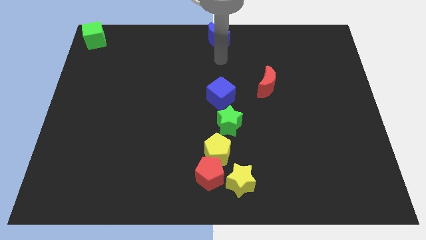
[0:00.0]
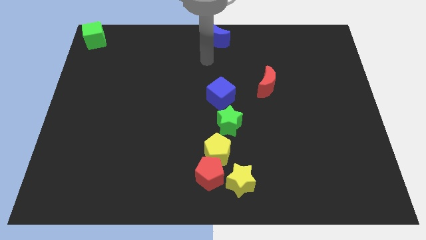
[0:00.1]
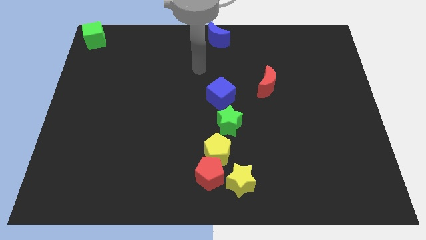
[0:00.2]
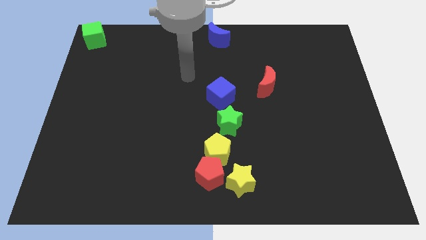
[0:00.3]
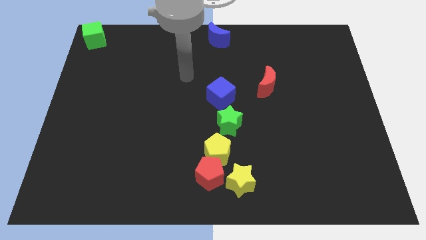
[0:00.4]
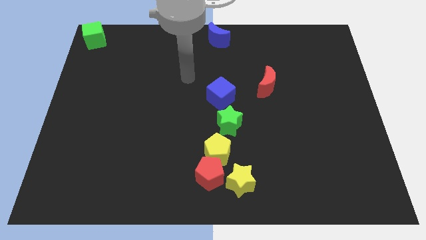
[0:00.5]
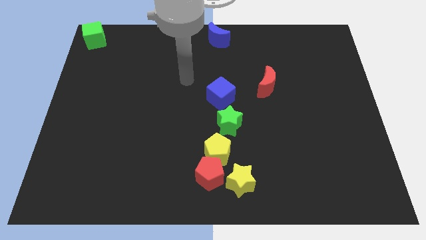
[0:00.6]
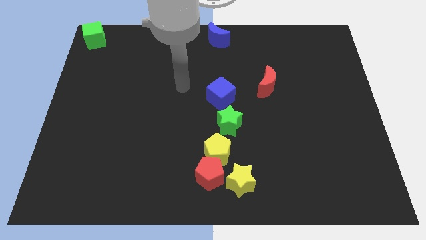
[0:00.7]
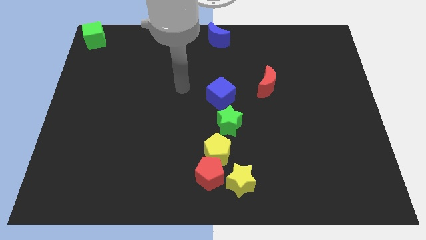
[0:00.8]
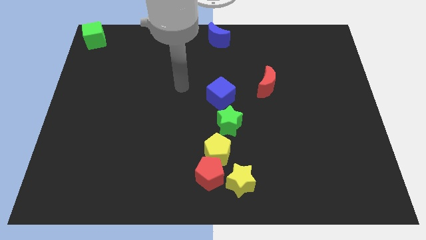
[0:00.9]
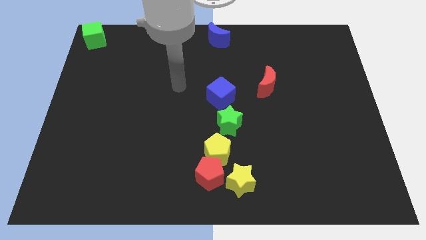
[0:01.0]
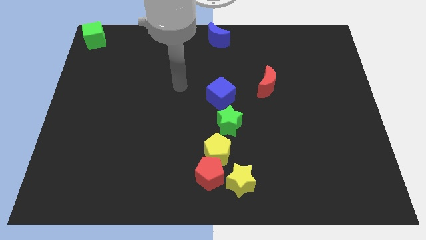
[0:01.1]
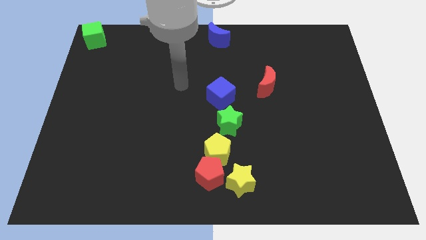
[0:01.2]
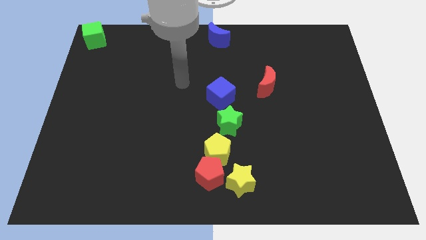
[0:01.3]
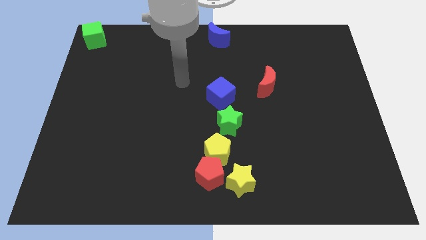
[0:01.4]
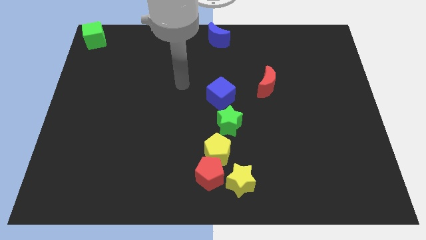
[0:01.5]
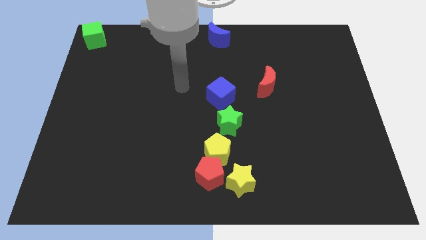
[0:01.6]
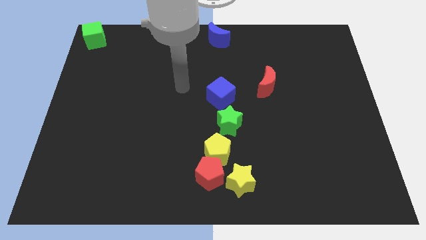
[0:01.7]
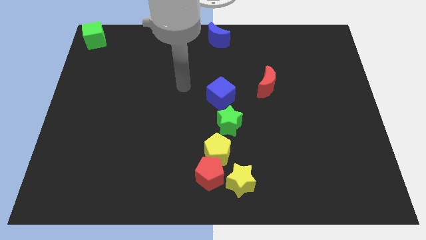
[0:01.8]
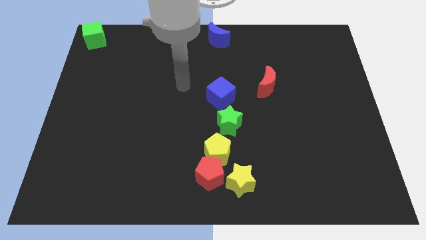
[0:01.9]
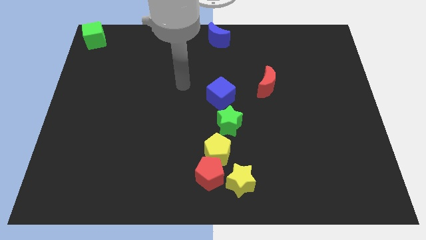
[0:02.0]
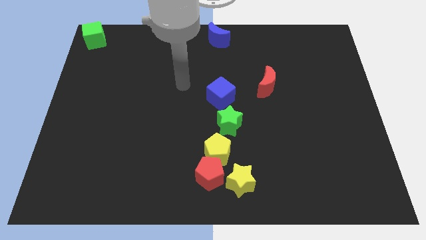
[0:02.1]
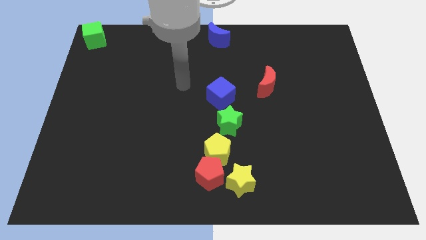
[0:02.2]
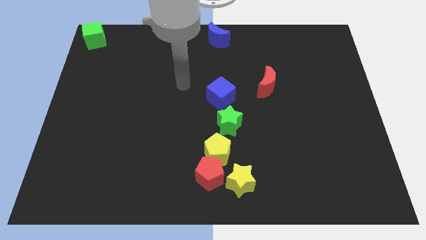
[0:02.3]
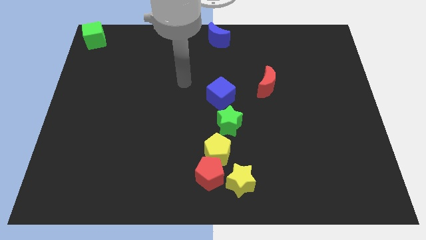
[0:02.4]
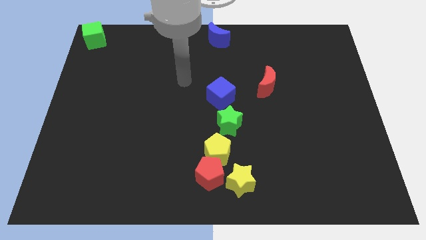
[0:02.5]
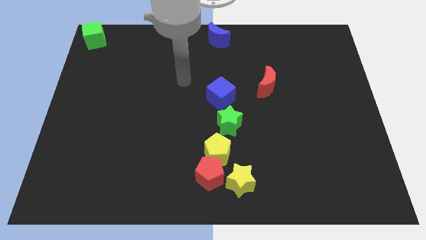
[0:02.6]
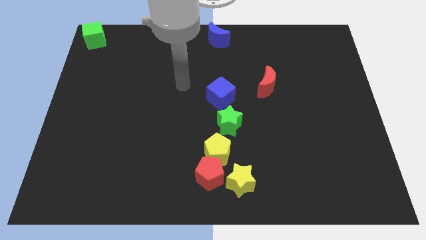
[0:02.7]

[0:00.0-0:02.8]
move your arm and point to the left of blue cube

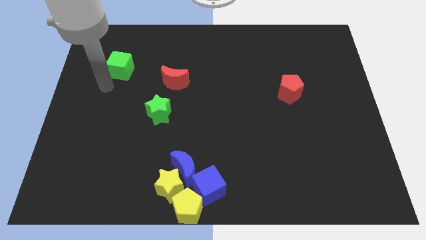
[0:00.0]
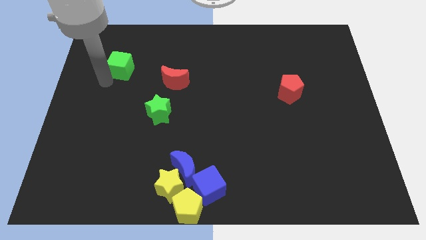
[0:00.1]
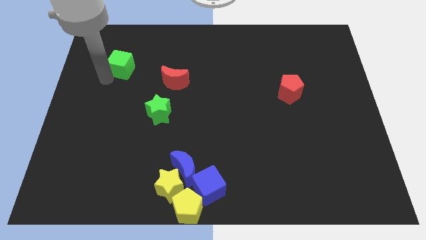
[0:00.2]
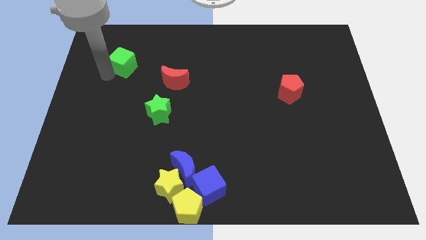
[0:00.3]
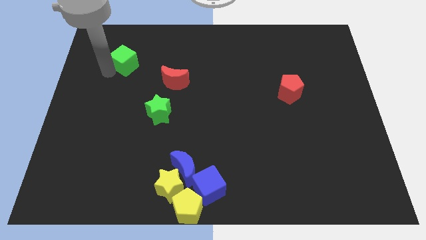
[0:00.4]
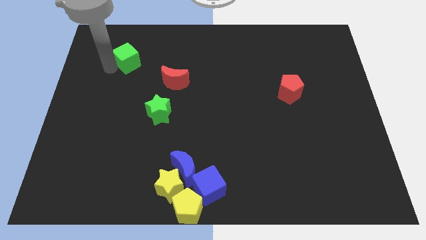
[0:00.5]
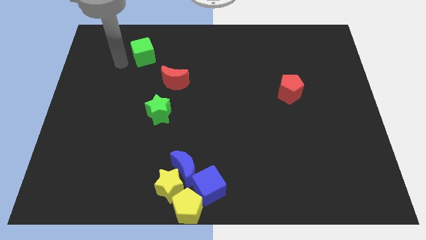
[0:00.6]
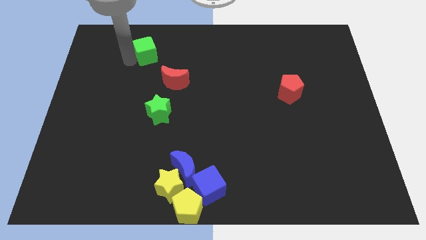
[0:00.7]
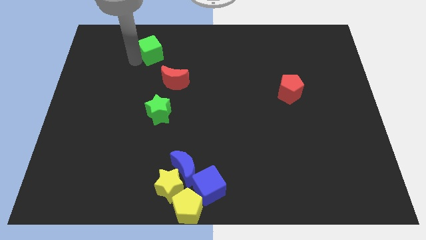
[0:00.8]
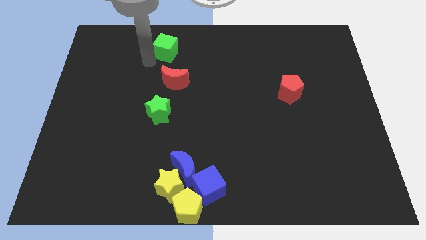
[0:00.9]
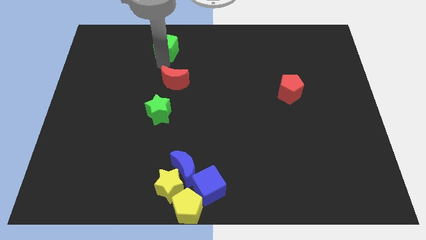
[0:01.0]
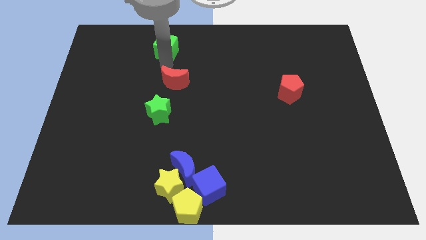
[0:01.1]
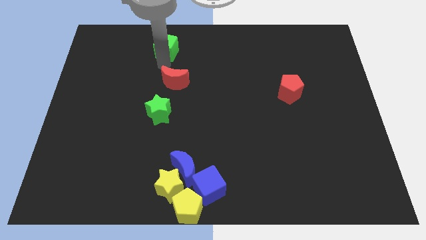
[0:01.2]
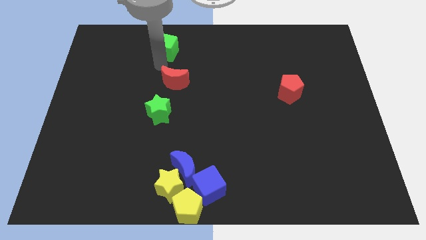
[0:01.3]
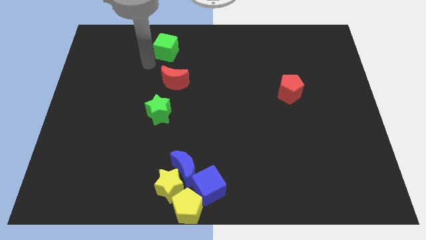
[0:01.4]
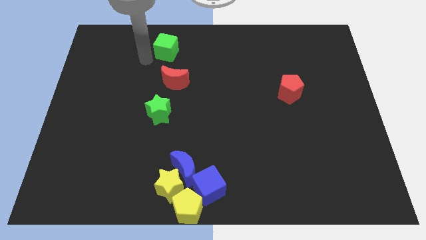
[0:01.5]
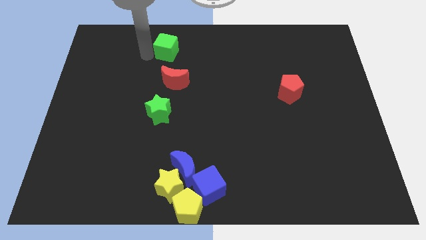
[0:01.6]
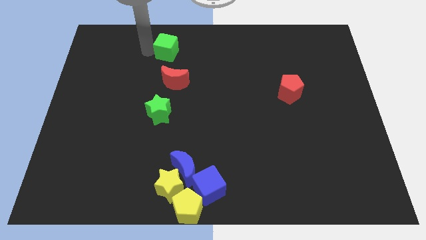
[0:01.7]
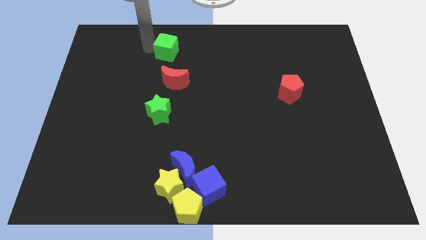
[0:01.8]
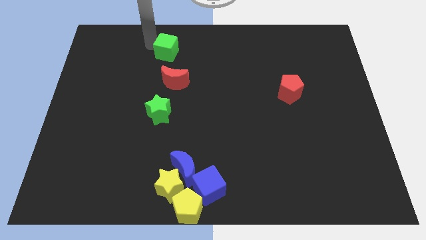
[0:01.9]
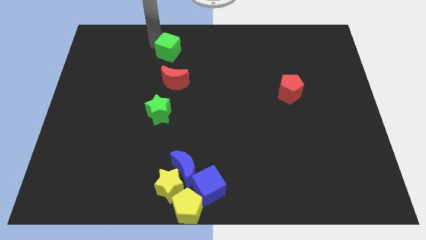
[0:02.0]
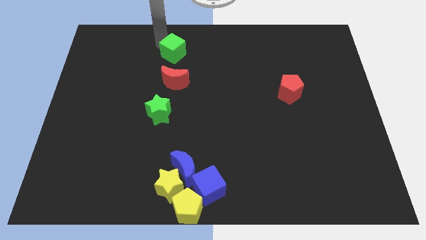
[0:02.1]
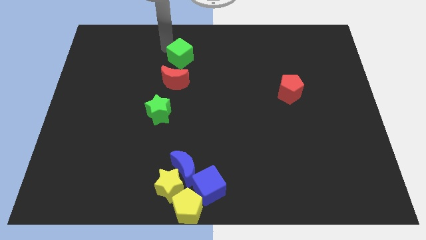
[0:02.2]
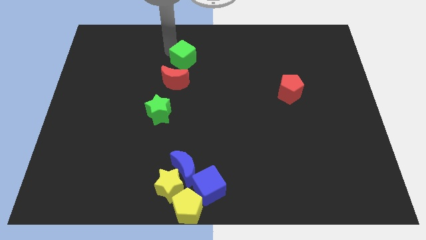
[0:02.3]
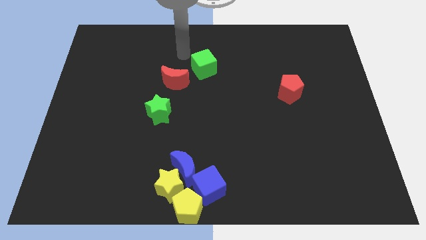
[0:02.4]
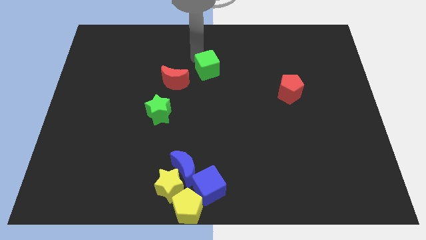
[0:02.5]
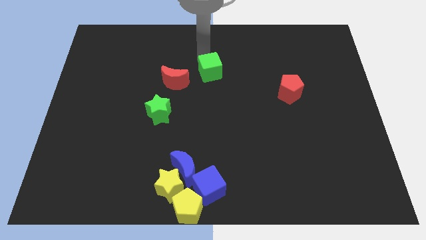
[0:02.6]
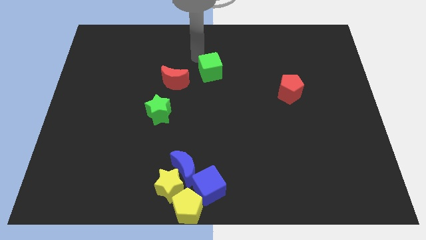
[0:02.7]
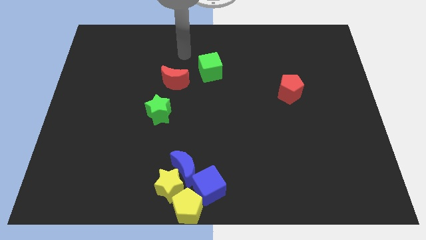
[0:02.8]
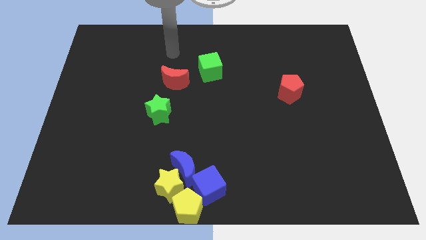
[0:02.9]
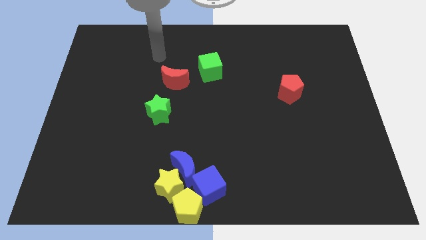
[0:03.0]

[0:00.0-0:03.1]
push the green cube to the right of the red crescent

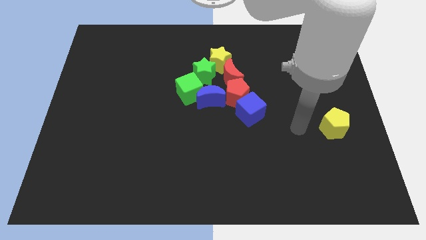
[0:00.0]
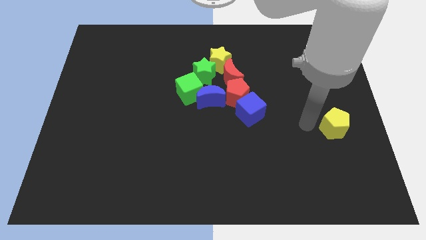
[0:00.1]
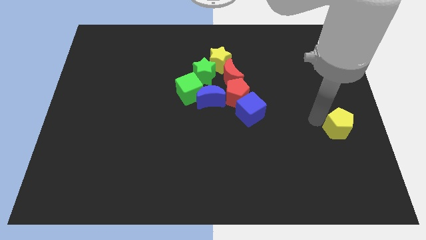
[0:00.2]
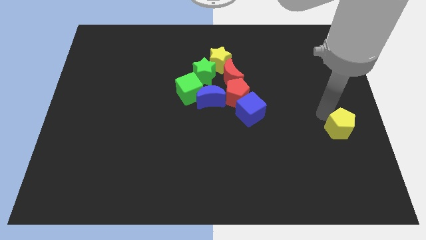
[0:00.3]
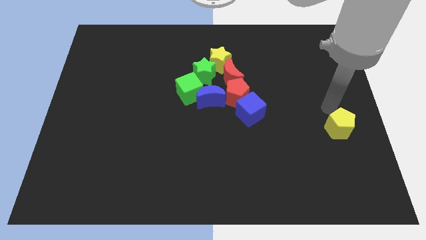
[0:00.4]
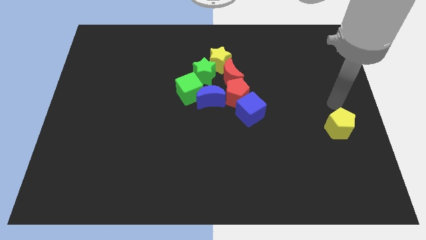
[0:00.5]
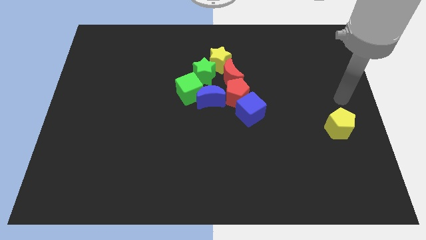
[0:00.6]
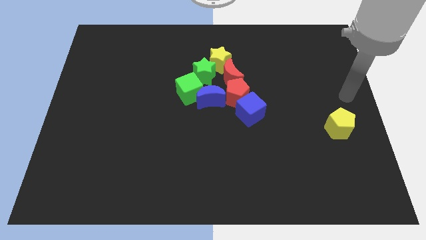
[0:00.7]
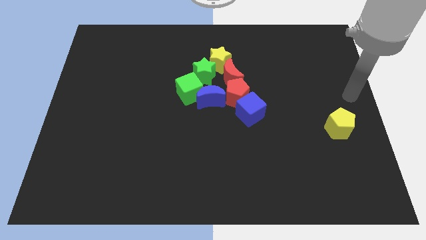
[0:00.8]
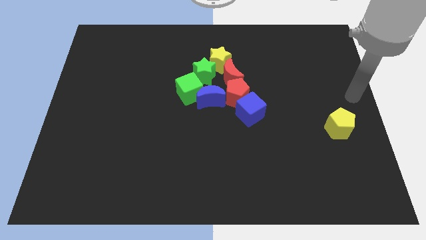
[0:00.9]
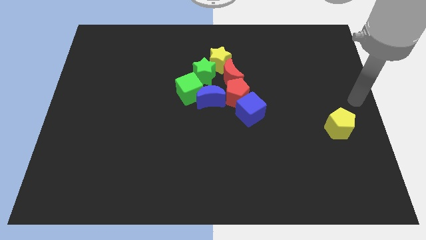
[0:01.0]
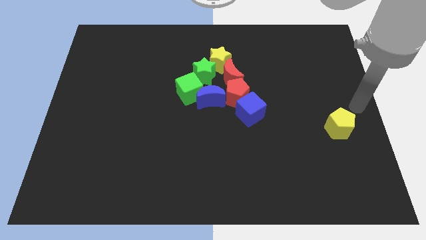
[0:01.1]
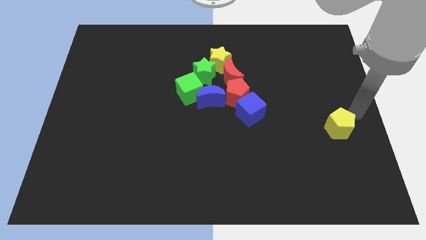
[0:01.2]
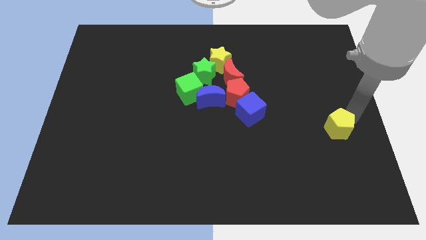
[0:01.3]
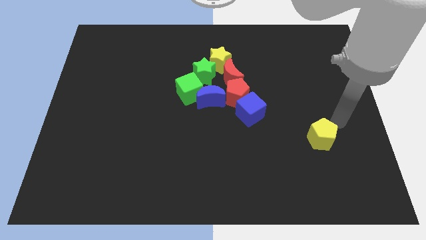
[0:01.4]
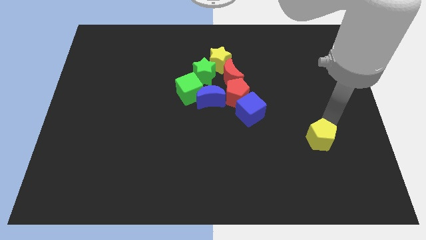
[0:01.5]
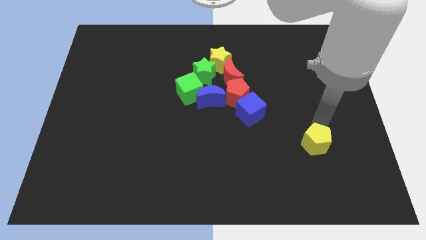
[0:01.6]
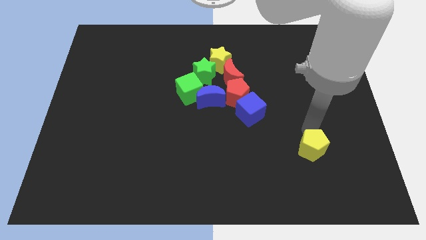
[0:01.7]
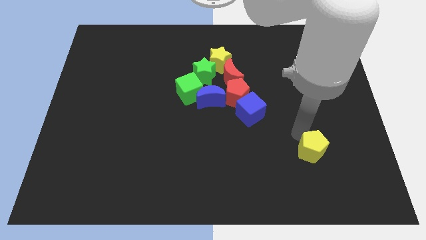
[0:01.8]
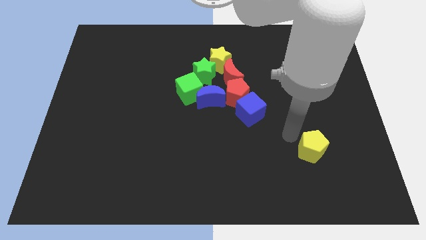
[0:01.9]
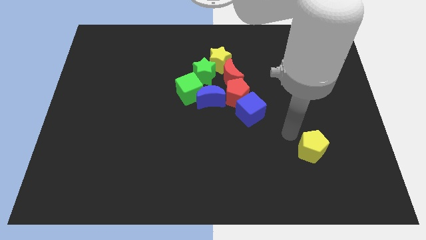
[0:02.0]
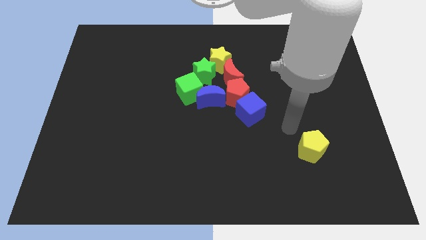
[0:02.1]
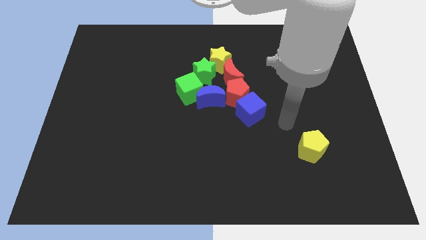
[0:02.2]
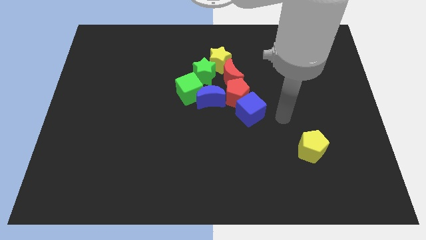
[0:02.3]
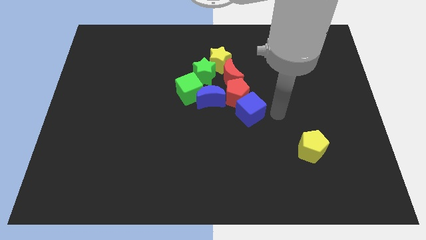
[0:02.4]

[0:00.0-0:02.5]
move the yellow pentagon to the bottom right of the blue cube

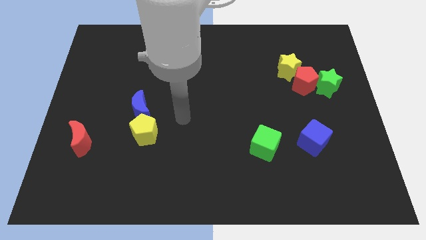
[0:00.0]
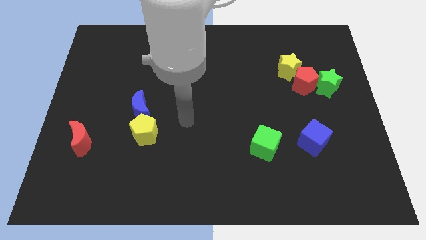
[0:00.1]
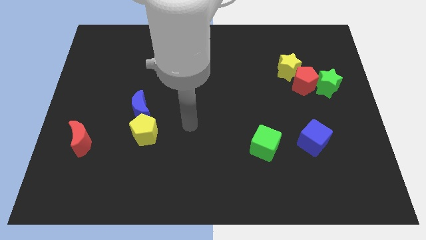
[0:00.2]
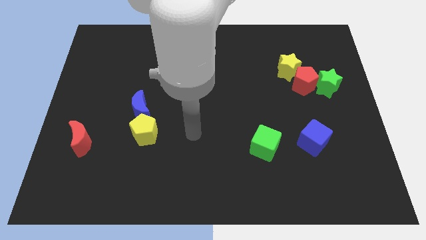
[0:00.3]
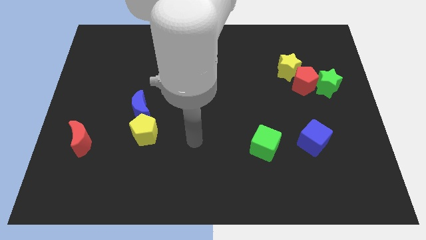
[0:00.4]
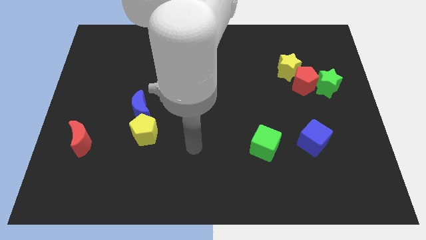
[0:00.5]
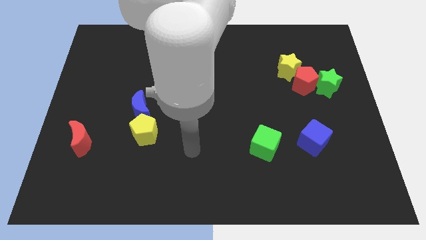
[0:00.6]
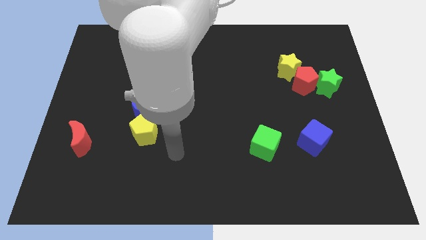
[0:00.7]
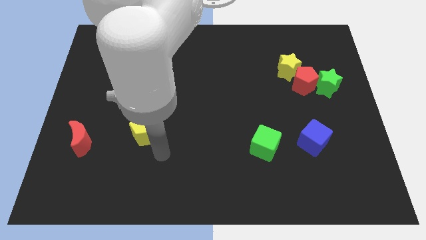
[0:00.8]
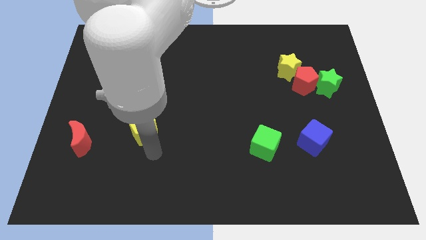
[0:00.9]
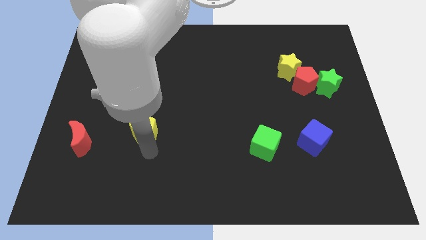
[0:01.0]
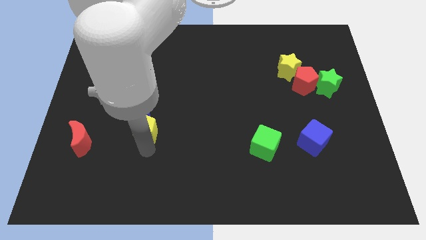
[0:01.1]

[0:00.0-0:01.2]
place the arm down to the yellow pentagon
